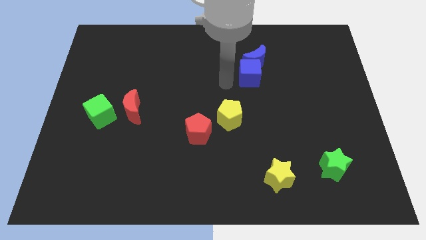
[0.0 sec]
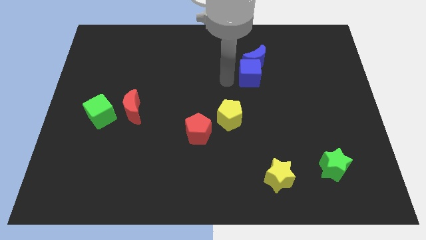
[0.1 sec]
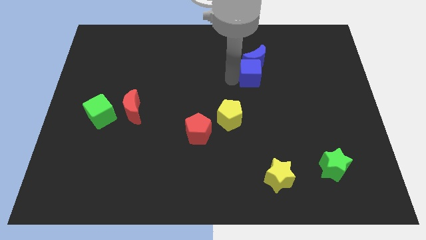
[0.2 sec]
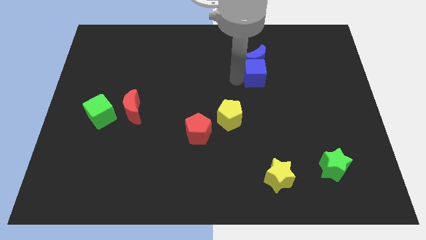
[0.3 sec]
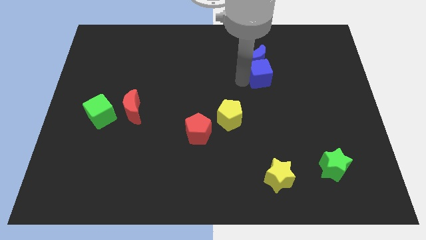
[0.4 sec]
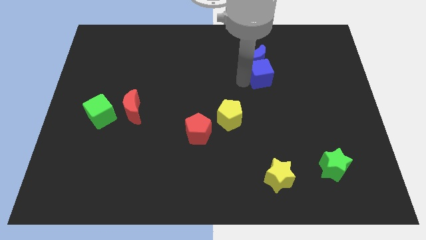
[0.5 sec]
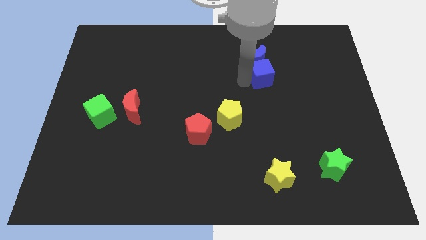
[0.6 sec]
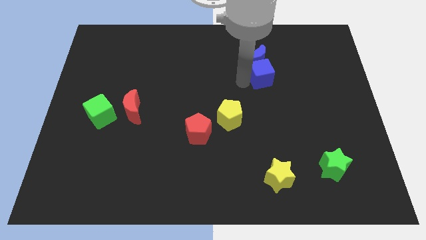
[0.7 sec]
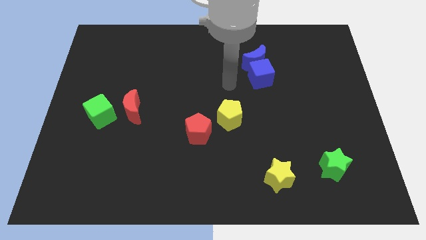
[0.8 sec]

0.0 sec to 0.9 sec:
push the blue cube slightly to the right

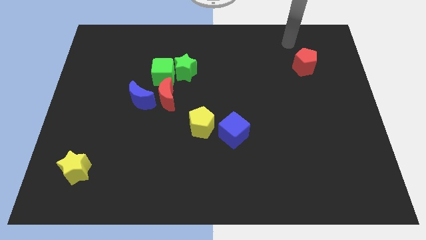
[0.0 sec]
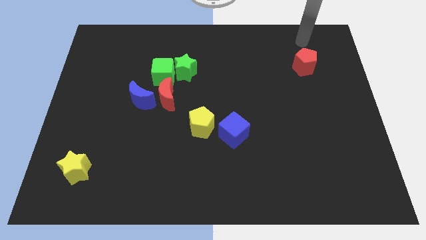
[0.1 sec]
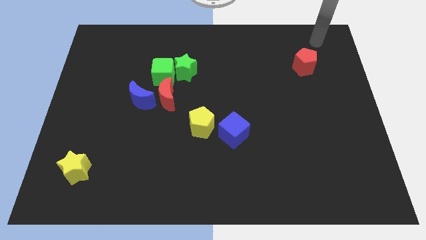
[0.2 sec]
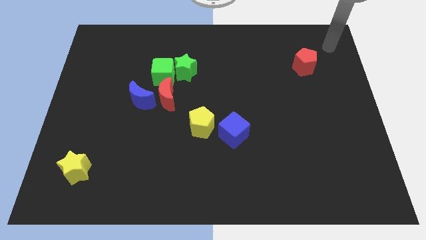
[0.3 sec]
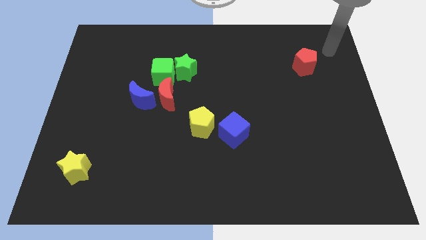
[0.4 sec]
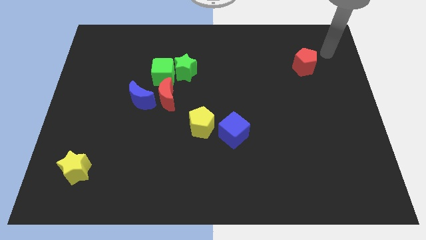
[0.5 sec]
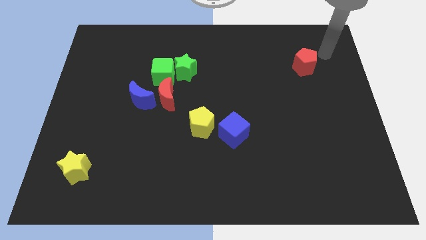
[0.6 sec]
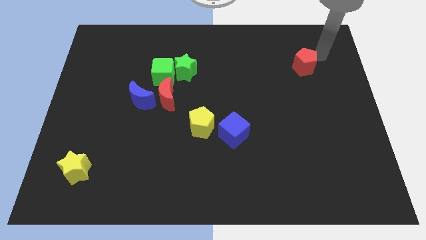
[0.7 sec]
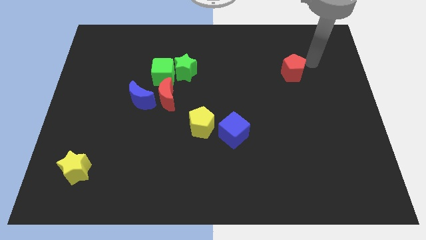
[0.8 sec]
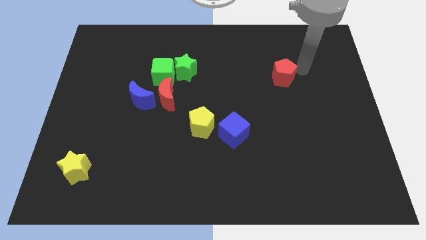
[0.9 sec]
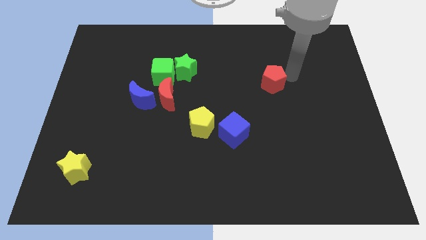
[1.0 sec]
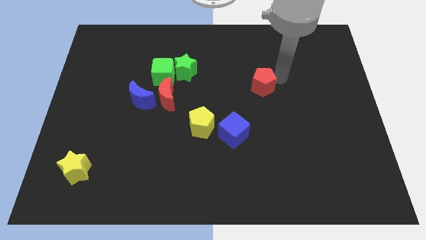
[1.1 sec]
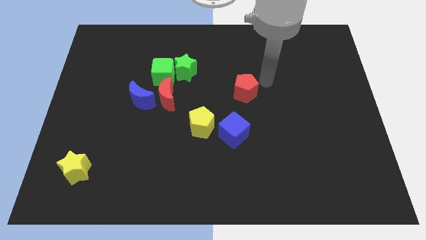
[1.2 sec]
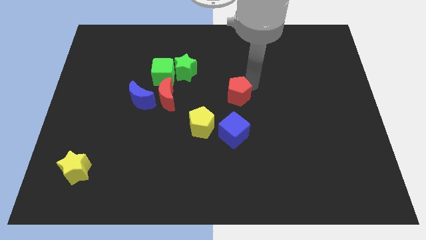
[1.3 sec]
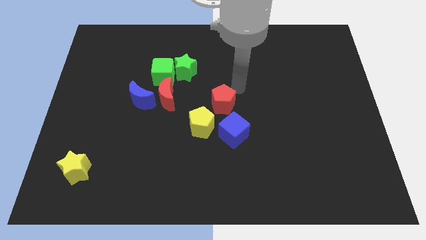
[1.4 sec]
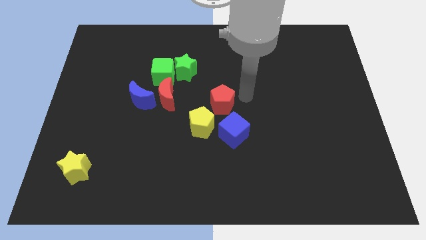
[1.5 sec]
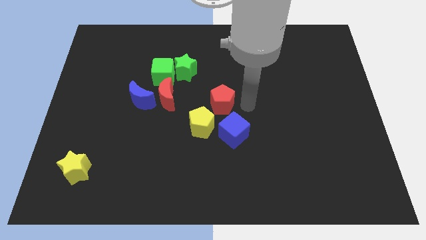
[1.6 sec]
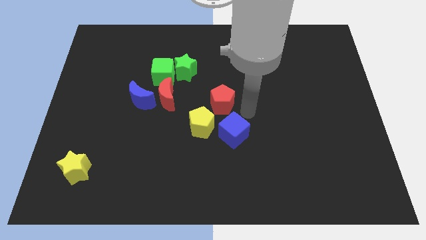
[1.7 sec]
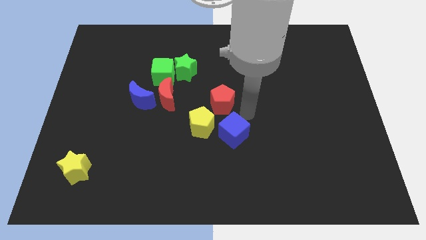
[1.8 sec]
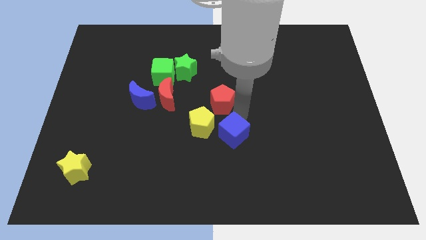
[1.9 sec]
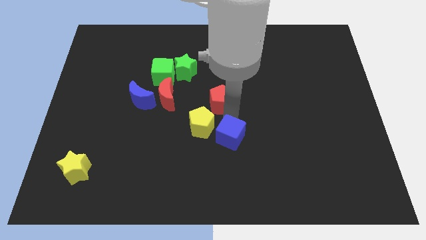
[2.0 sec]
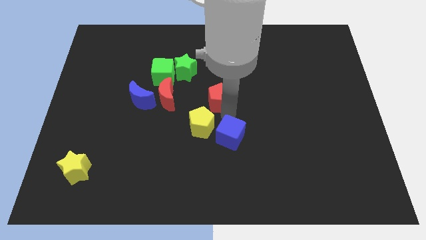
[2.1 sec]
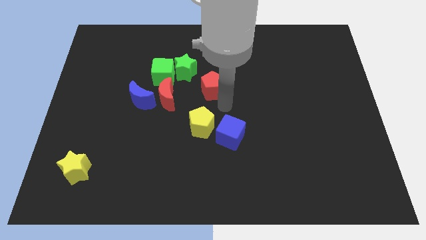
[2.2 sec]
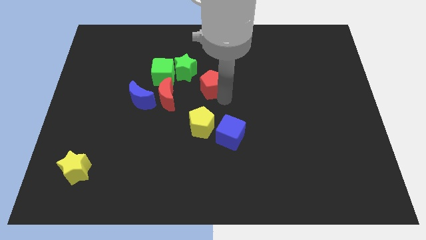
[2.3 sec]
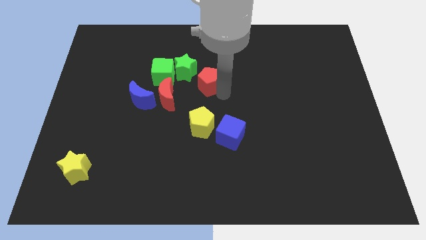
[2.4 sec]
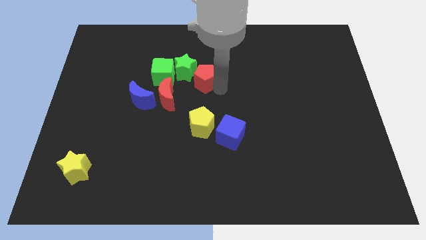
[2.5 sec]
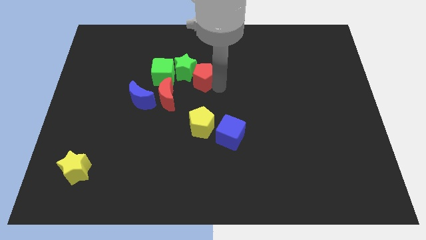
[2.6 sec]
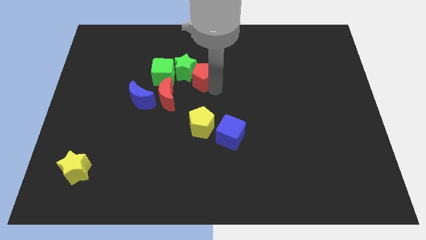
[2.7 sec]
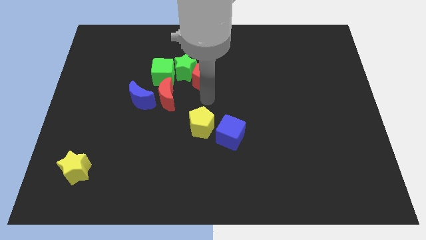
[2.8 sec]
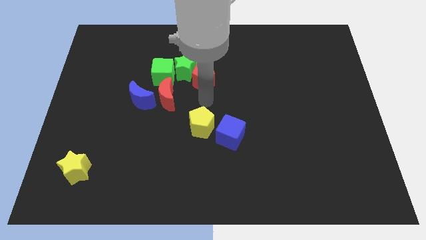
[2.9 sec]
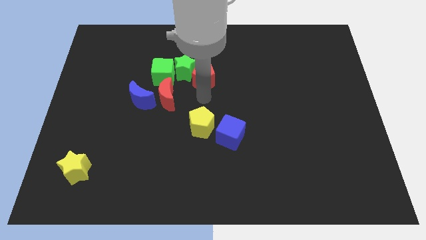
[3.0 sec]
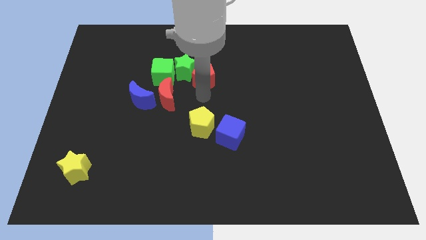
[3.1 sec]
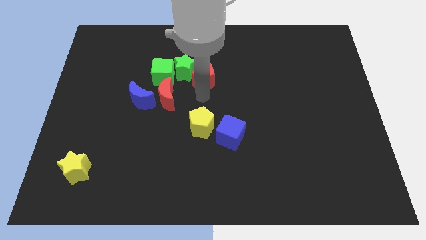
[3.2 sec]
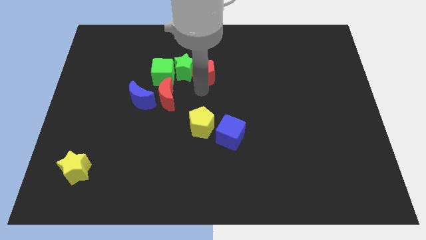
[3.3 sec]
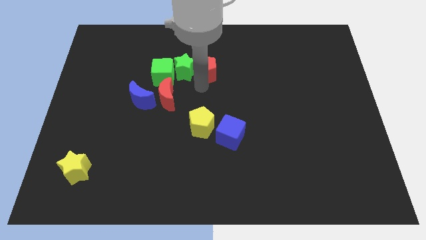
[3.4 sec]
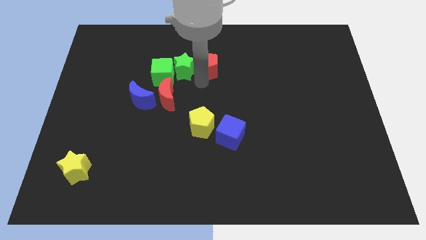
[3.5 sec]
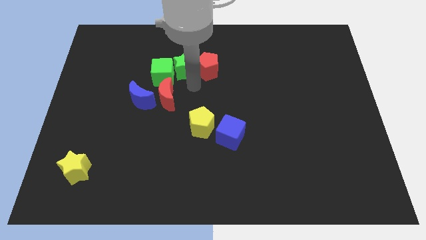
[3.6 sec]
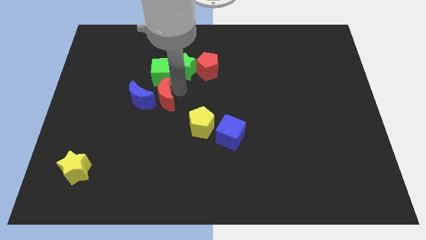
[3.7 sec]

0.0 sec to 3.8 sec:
put the red pentagon on the right side of the green star

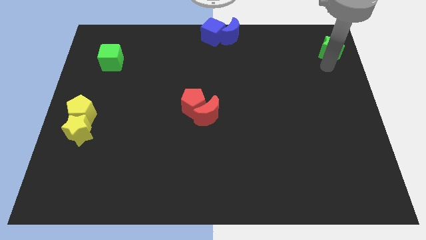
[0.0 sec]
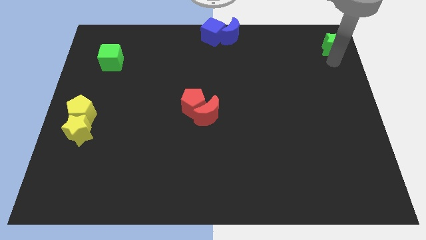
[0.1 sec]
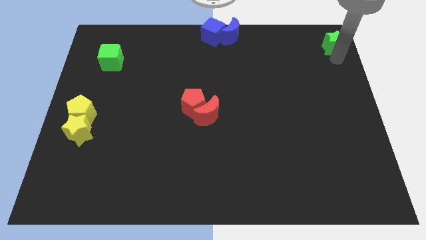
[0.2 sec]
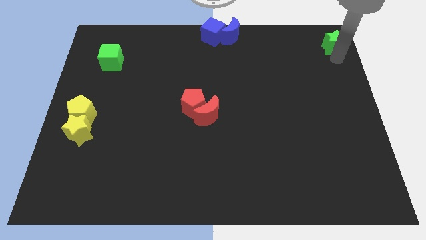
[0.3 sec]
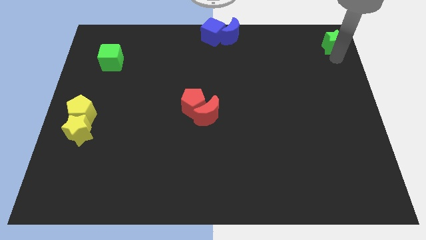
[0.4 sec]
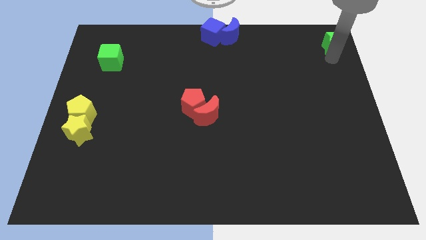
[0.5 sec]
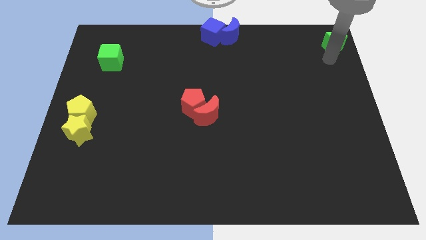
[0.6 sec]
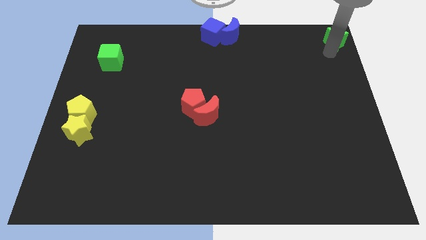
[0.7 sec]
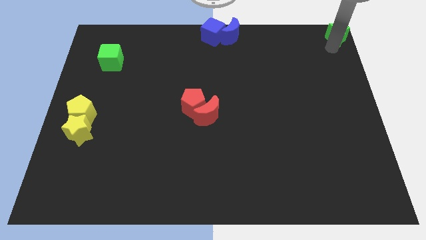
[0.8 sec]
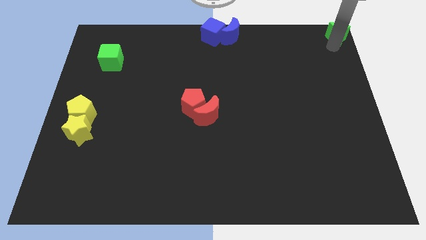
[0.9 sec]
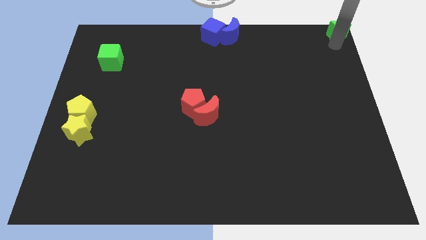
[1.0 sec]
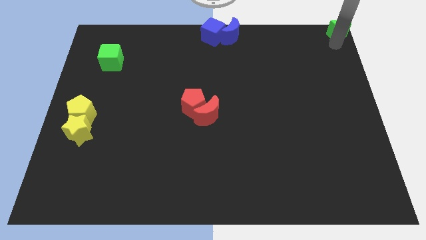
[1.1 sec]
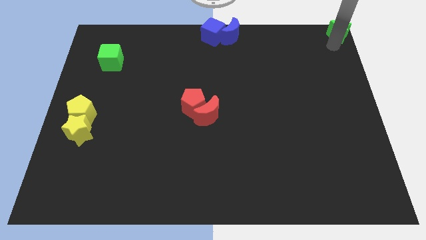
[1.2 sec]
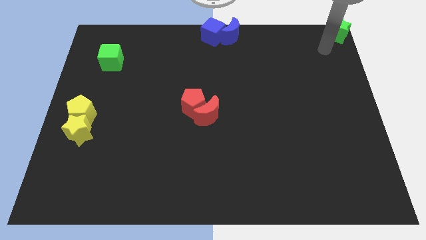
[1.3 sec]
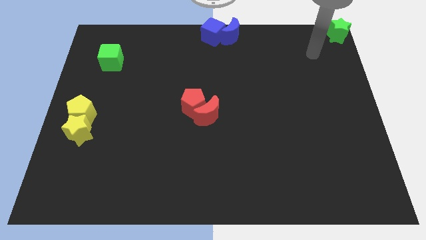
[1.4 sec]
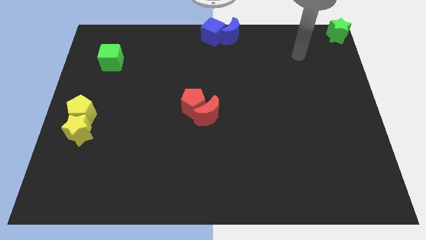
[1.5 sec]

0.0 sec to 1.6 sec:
push the green star towards the top right corner of the board

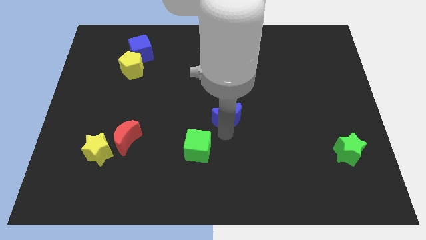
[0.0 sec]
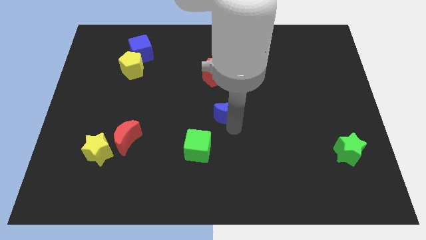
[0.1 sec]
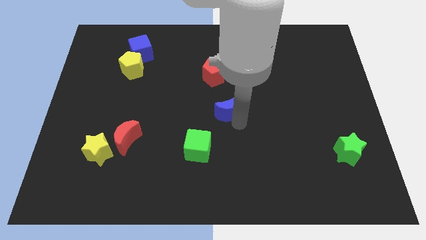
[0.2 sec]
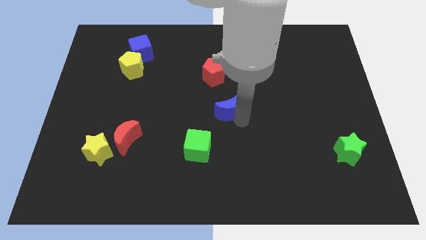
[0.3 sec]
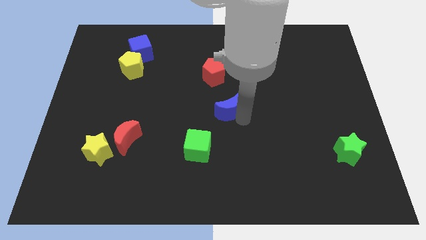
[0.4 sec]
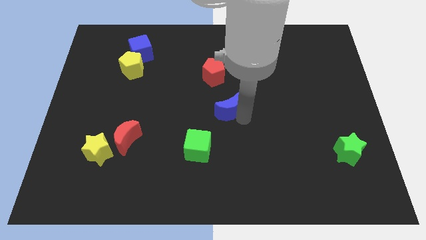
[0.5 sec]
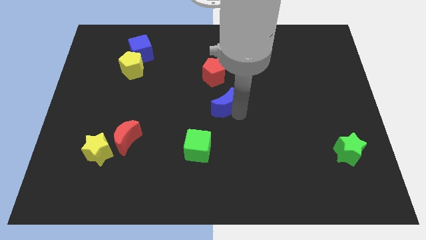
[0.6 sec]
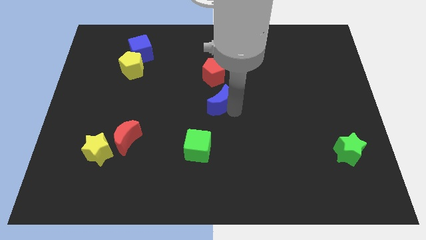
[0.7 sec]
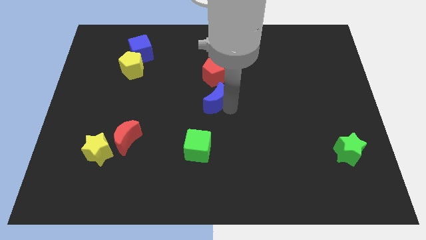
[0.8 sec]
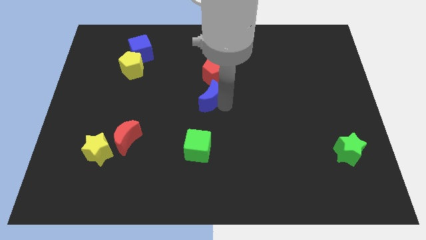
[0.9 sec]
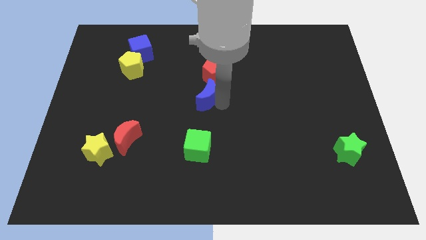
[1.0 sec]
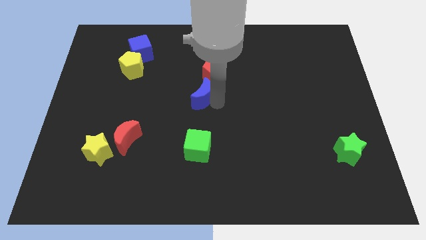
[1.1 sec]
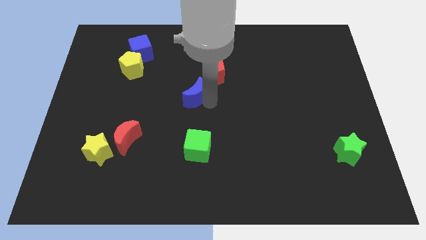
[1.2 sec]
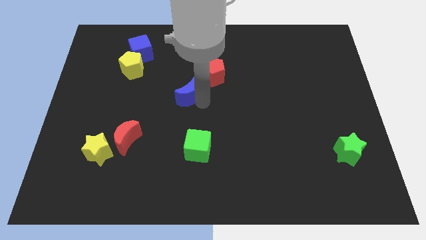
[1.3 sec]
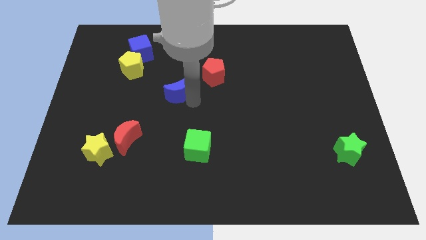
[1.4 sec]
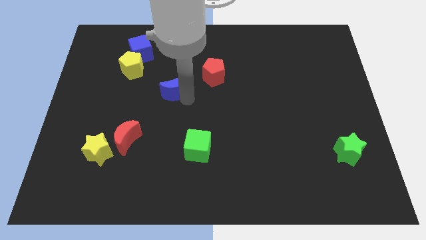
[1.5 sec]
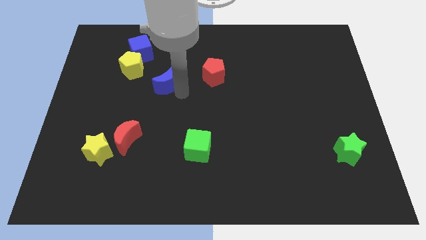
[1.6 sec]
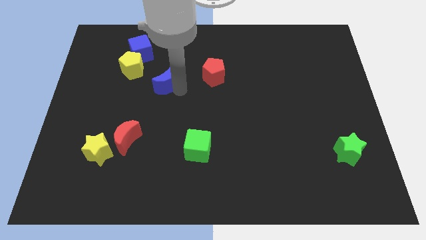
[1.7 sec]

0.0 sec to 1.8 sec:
move the blue moon towards the yellow pentagon

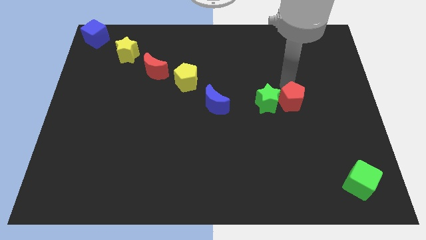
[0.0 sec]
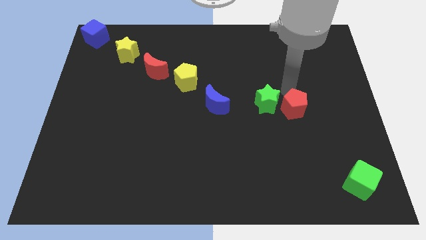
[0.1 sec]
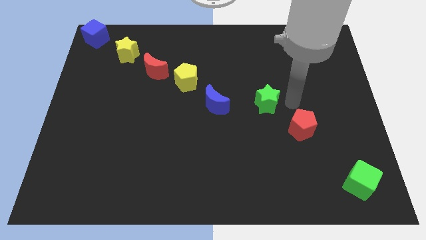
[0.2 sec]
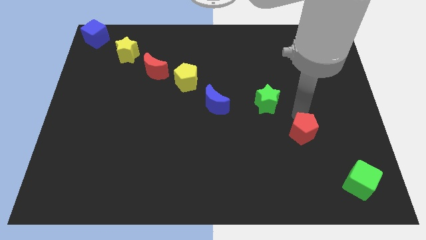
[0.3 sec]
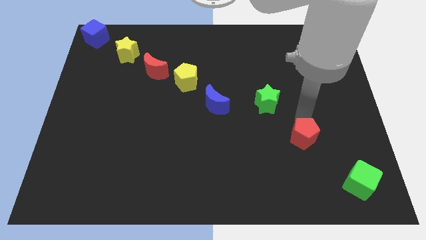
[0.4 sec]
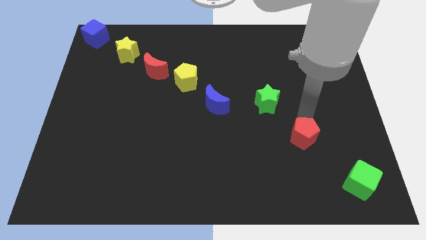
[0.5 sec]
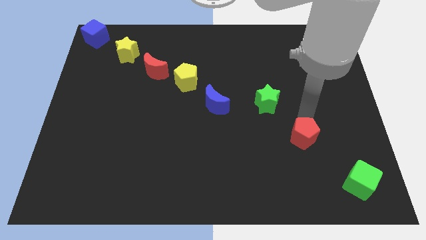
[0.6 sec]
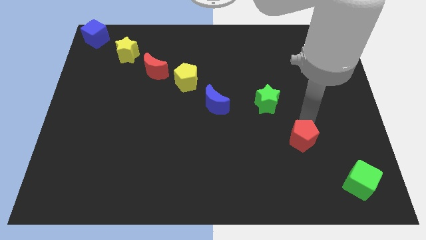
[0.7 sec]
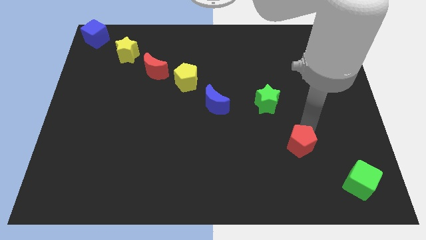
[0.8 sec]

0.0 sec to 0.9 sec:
place red pentagon between blue crescent and green block
